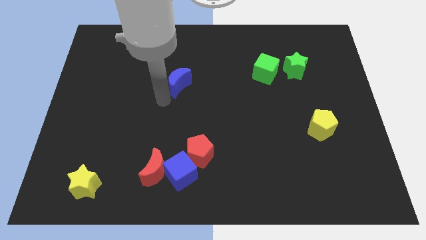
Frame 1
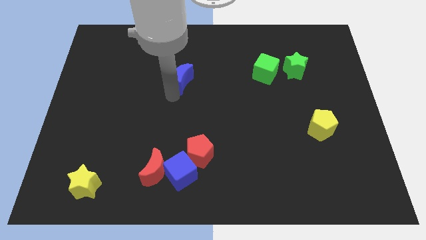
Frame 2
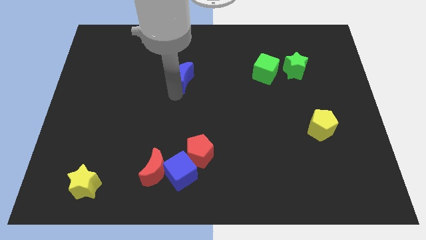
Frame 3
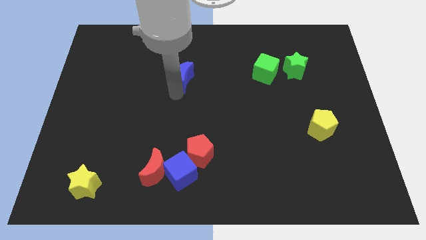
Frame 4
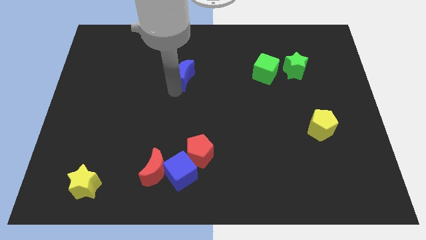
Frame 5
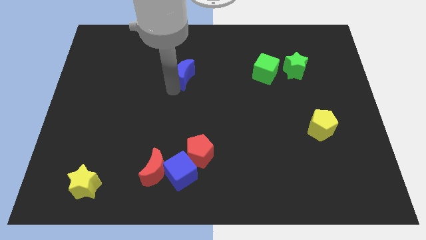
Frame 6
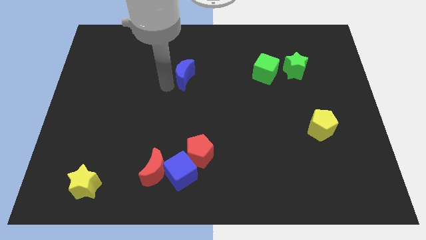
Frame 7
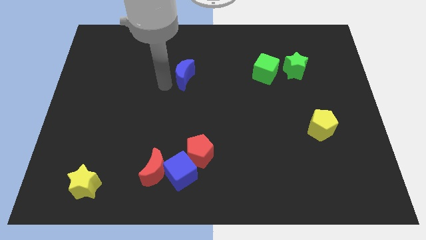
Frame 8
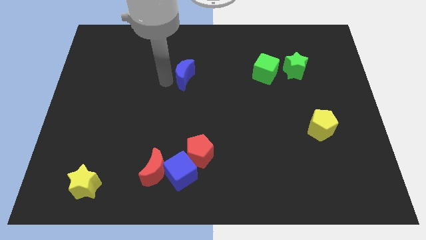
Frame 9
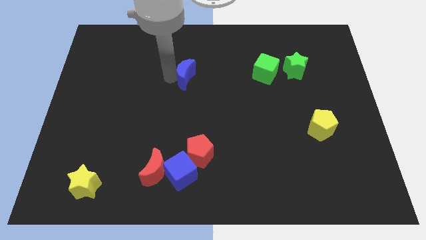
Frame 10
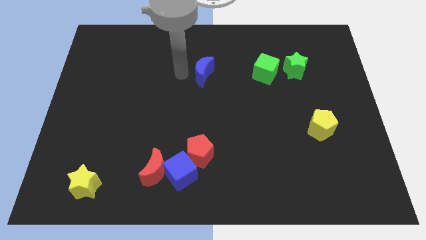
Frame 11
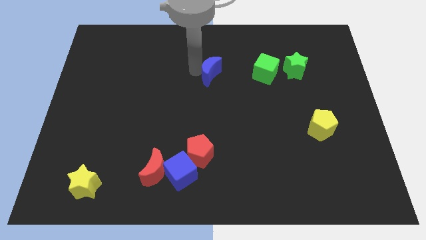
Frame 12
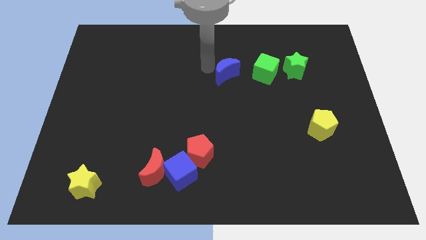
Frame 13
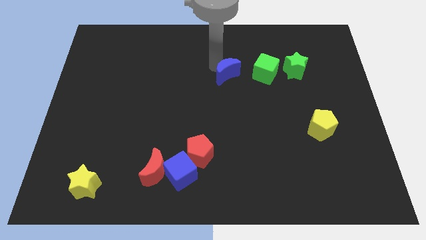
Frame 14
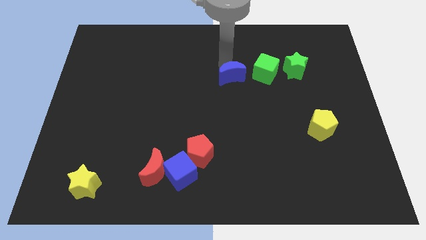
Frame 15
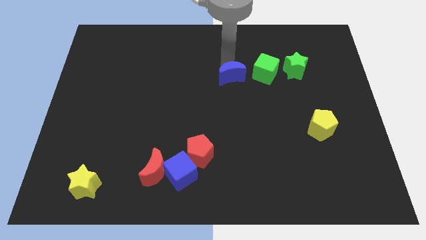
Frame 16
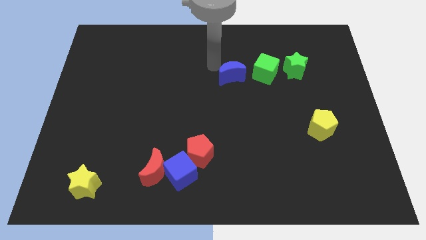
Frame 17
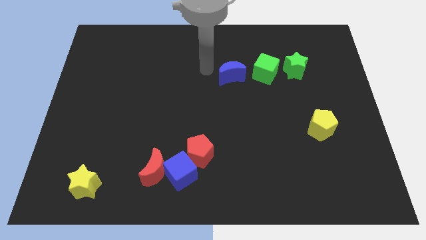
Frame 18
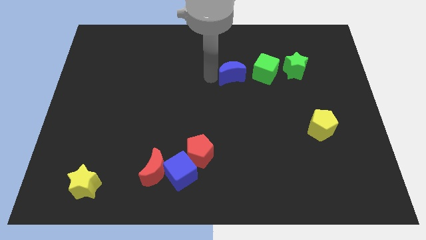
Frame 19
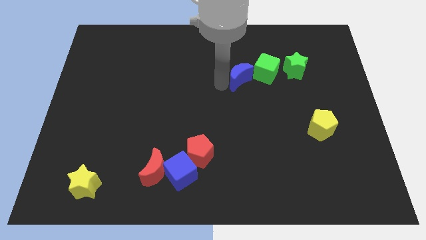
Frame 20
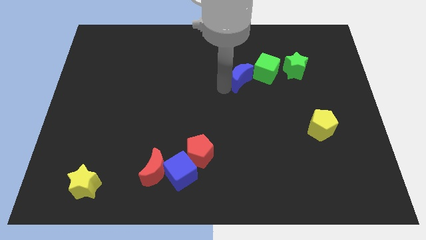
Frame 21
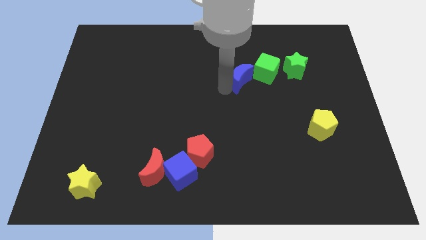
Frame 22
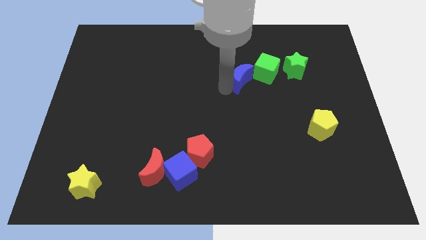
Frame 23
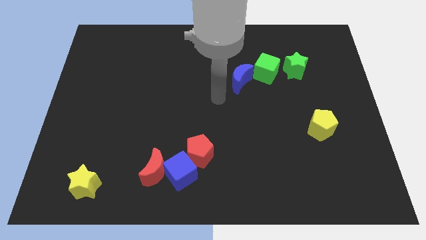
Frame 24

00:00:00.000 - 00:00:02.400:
move the blue crescent into the green cube

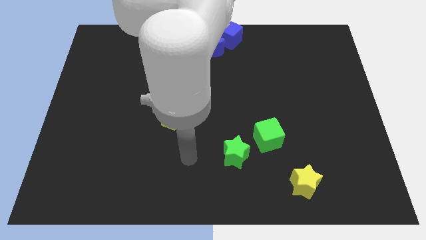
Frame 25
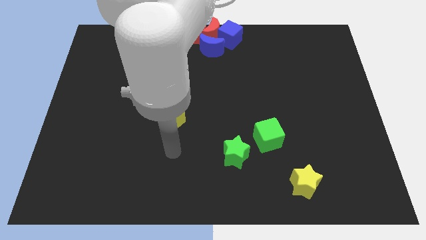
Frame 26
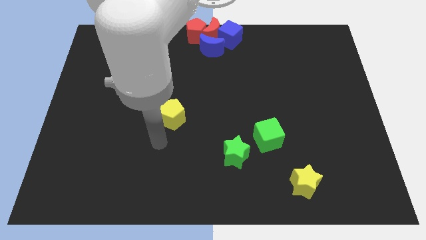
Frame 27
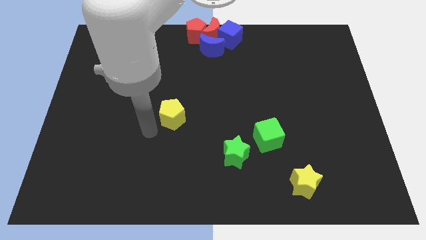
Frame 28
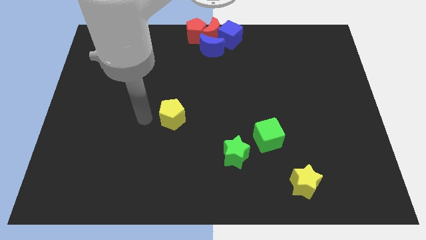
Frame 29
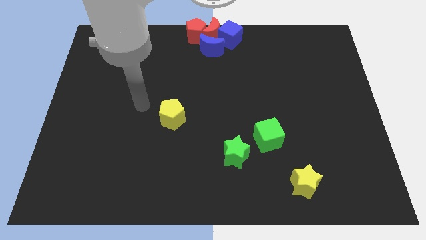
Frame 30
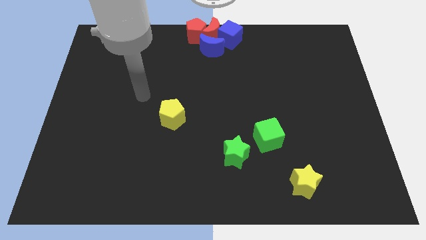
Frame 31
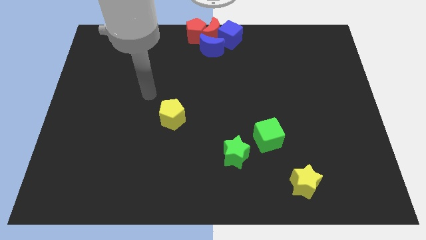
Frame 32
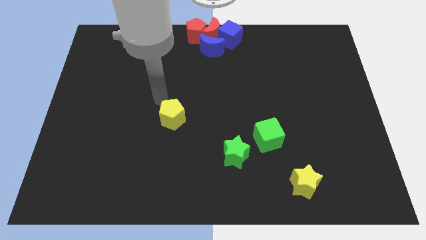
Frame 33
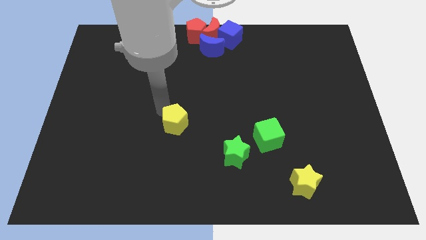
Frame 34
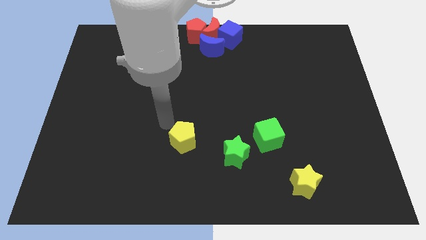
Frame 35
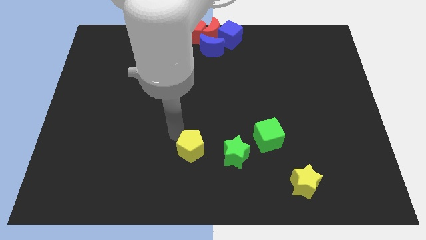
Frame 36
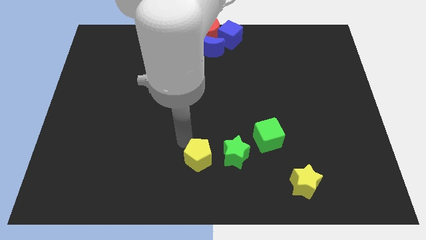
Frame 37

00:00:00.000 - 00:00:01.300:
place the yellow pentagon to the left of the green star

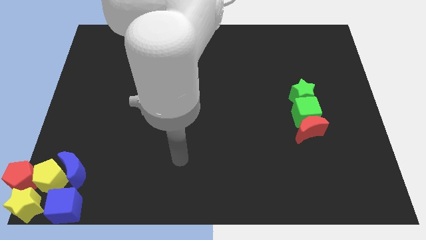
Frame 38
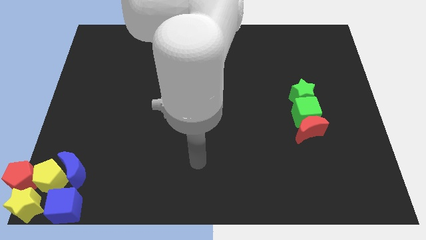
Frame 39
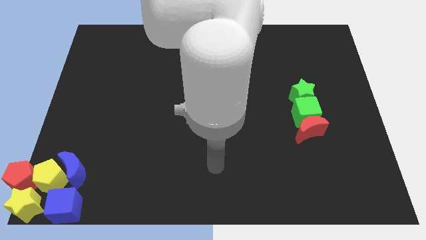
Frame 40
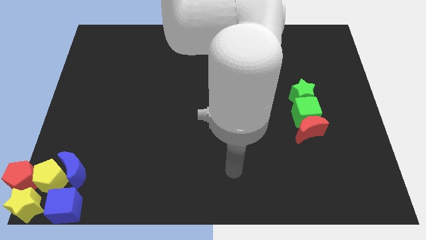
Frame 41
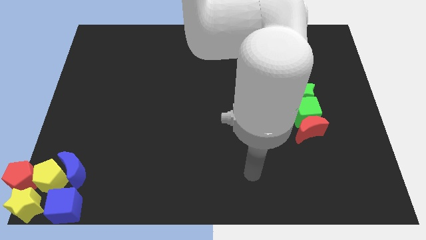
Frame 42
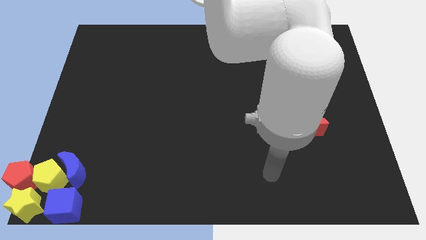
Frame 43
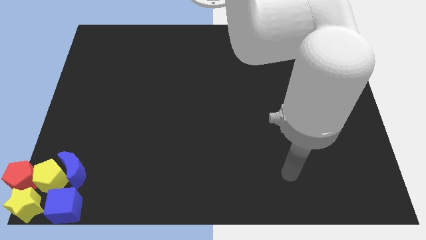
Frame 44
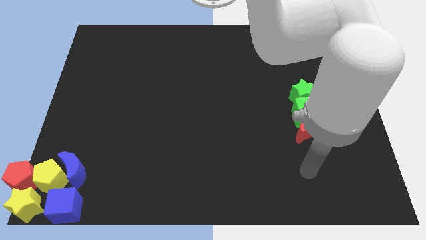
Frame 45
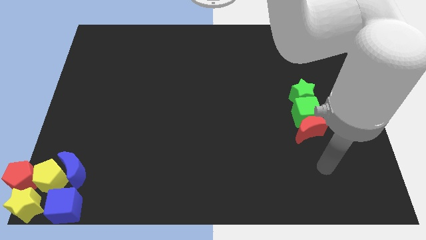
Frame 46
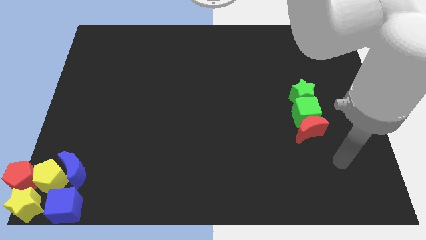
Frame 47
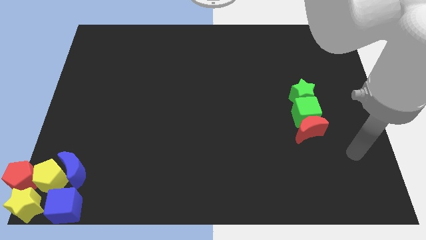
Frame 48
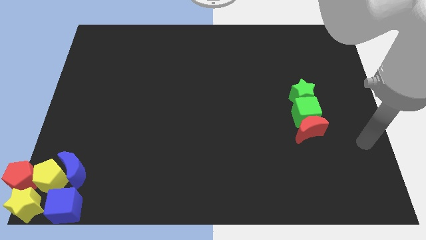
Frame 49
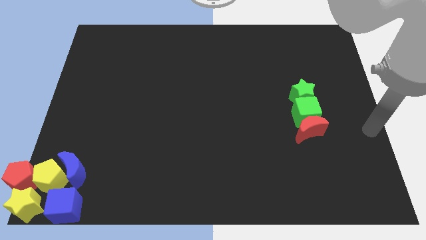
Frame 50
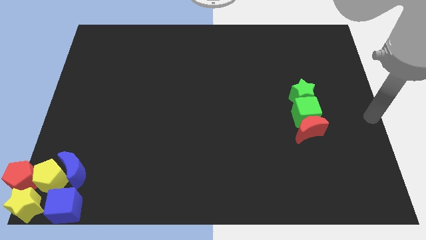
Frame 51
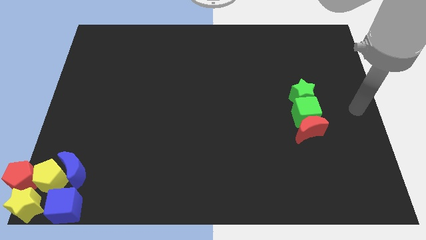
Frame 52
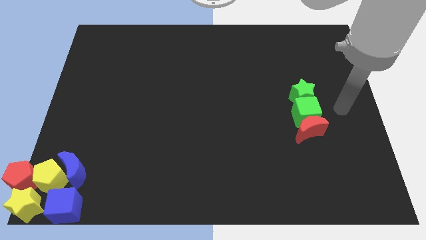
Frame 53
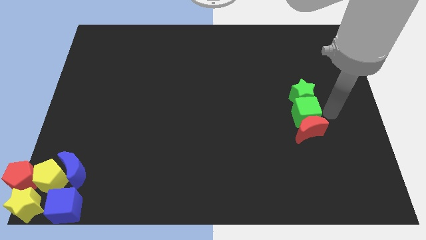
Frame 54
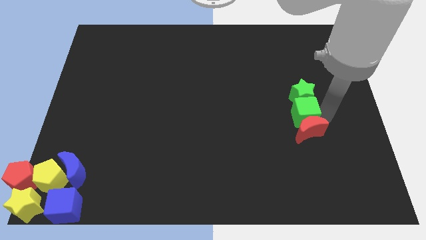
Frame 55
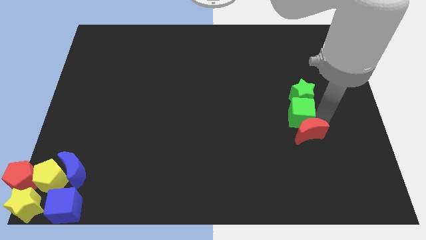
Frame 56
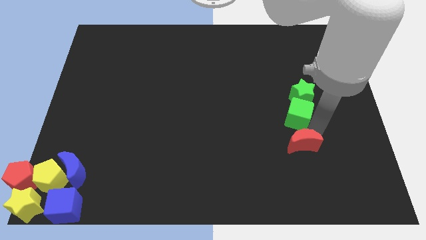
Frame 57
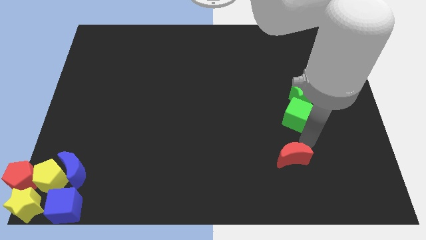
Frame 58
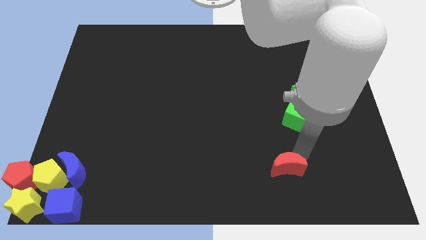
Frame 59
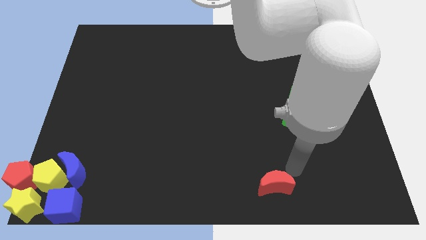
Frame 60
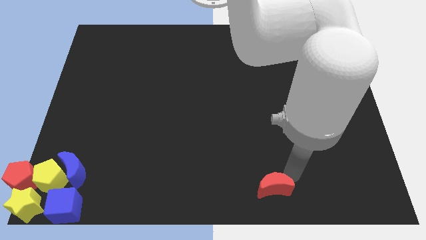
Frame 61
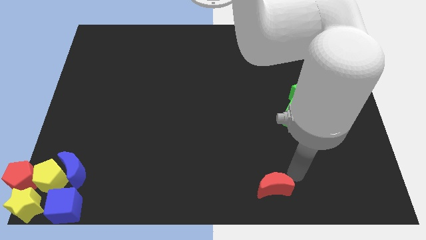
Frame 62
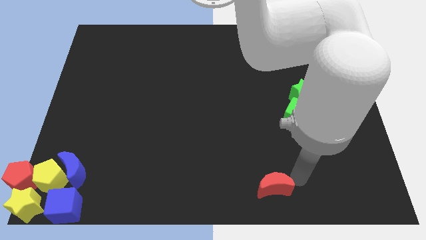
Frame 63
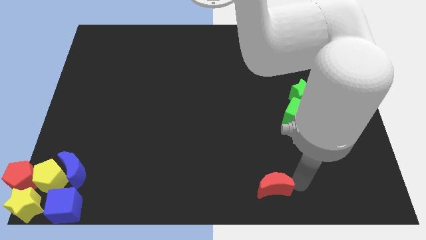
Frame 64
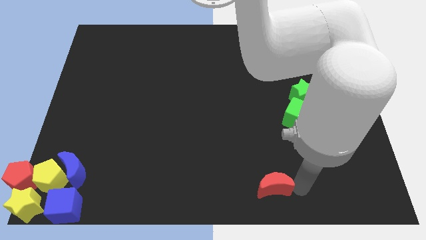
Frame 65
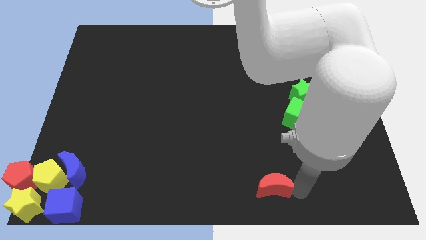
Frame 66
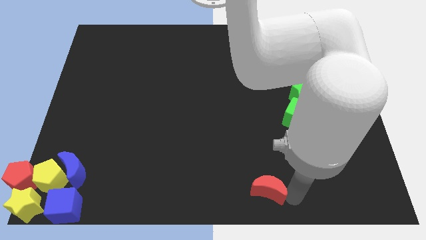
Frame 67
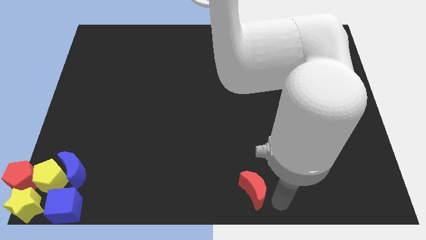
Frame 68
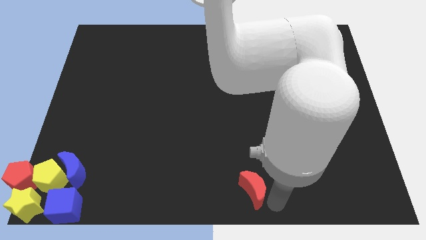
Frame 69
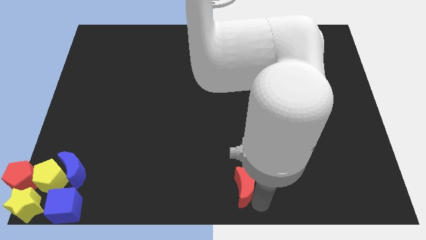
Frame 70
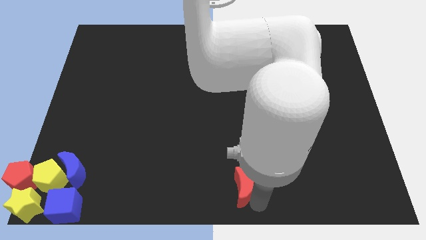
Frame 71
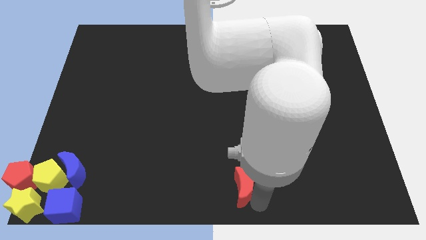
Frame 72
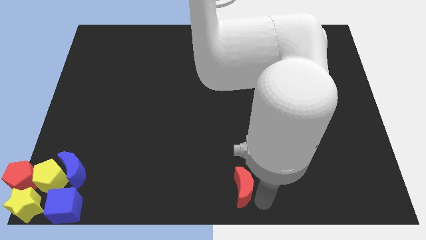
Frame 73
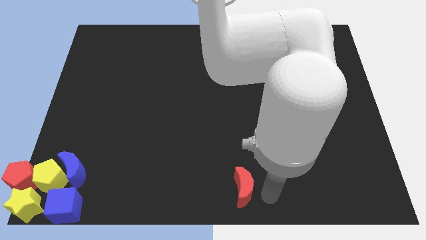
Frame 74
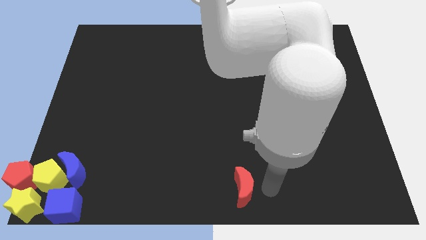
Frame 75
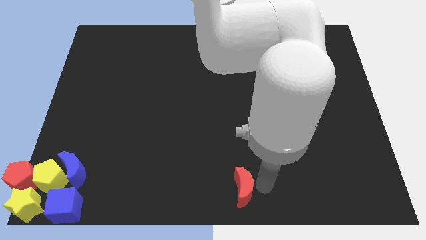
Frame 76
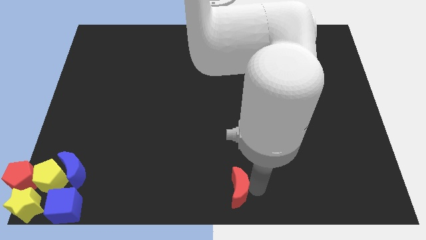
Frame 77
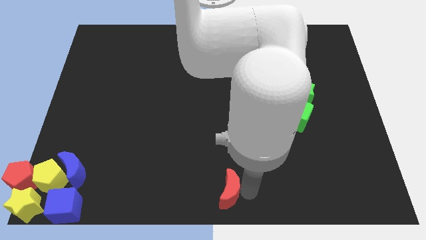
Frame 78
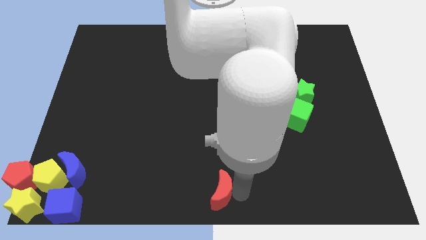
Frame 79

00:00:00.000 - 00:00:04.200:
place the red crescent at the bottom center of the board

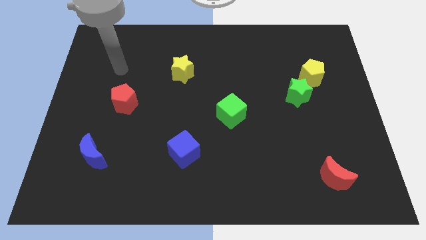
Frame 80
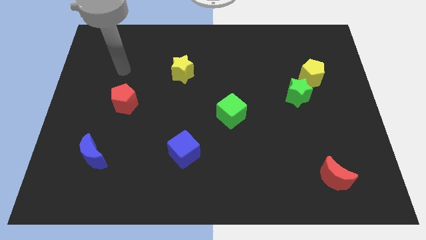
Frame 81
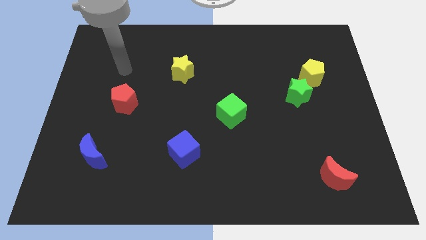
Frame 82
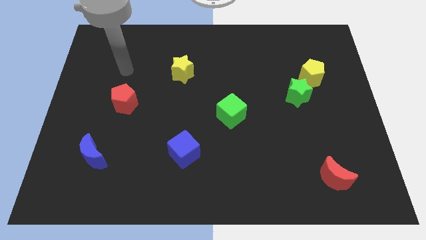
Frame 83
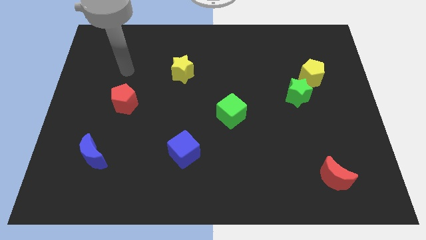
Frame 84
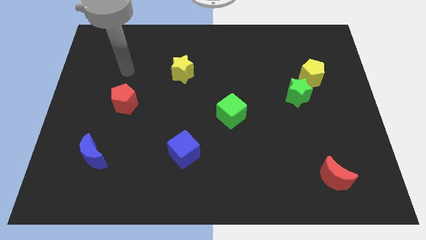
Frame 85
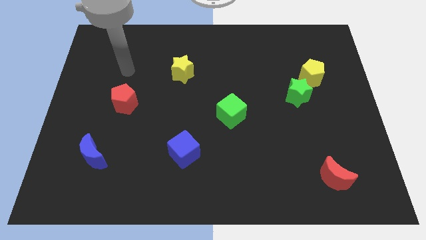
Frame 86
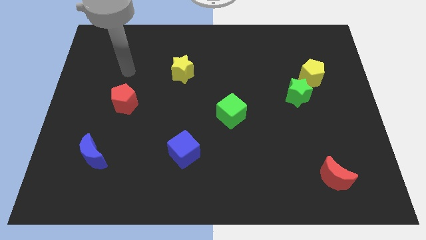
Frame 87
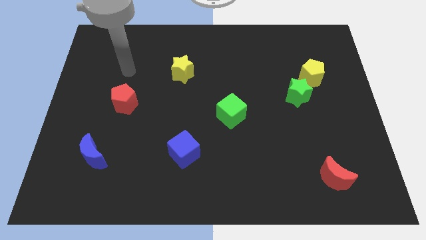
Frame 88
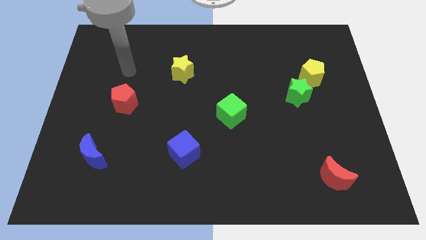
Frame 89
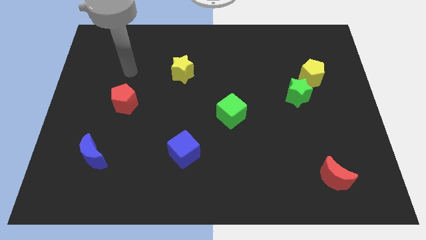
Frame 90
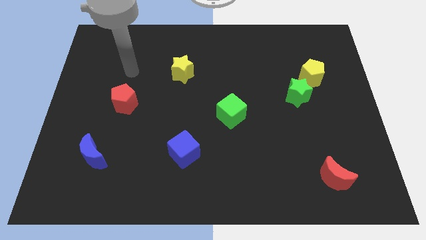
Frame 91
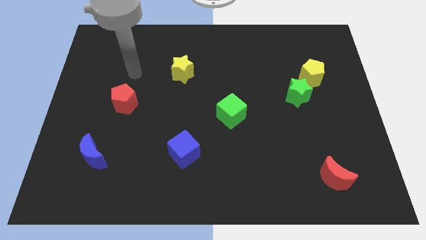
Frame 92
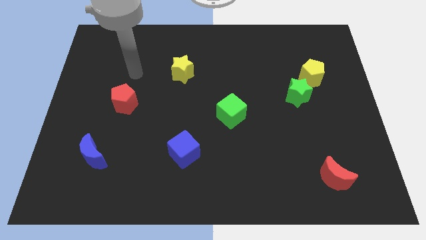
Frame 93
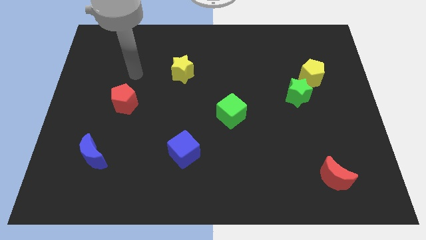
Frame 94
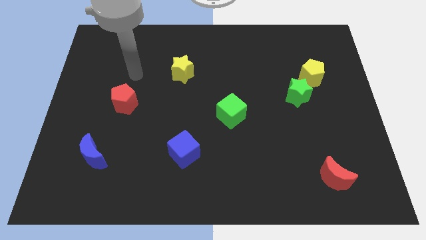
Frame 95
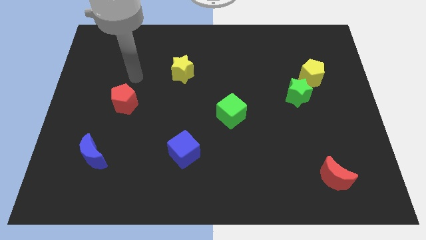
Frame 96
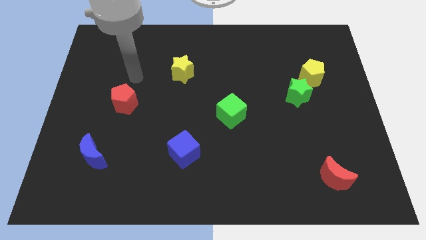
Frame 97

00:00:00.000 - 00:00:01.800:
move the arm close to the red pentagon
